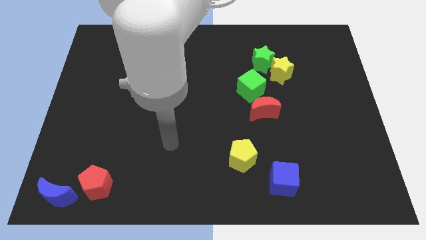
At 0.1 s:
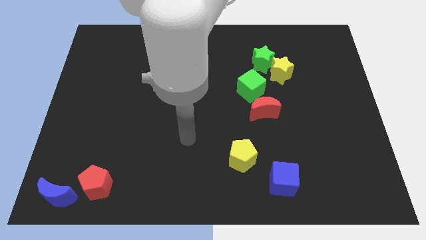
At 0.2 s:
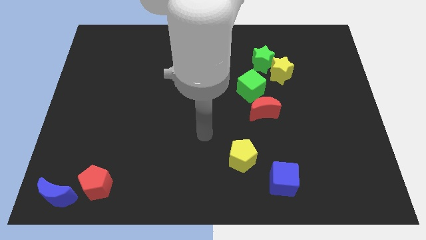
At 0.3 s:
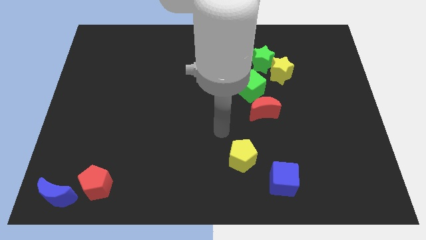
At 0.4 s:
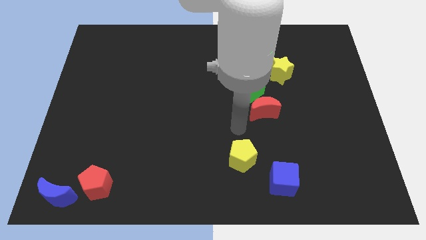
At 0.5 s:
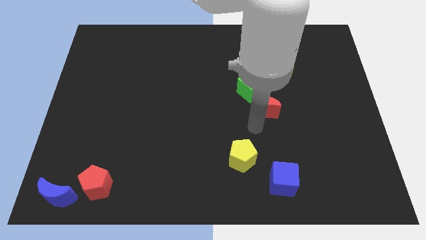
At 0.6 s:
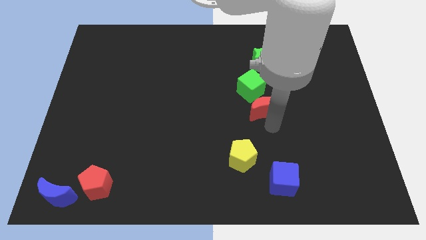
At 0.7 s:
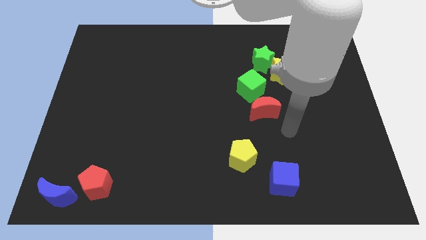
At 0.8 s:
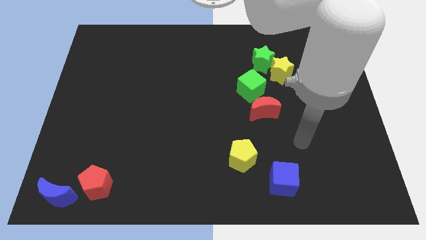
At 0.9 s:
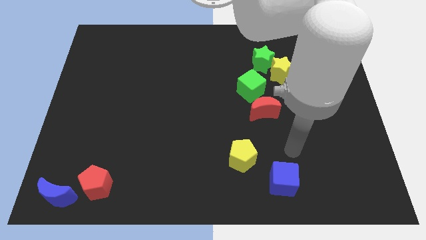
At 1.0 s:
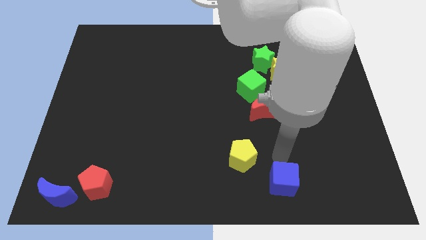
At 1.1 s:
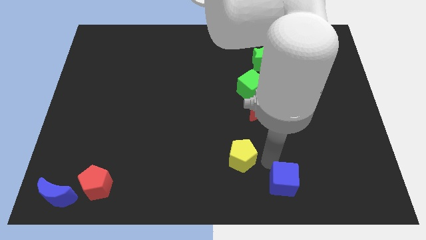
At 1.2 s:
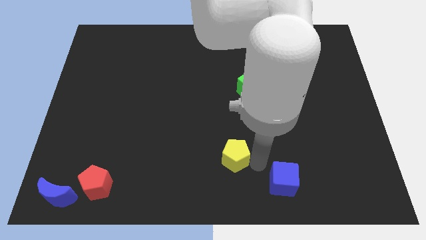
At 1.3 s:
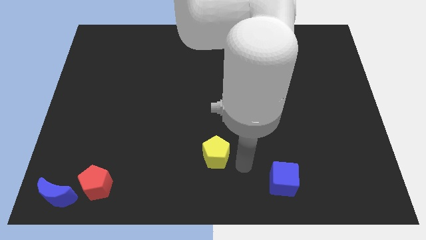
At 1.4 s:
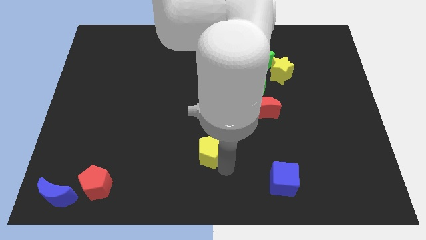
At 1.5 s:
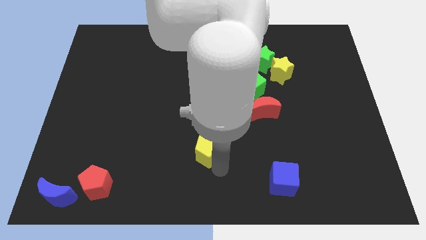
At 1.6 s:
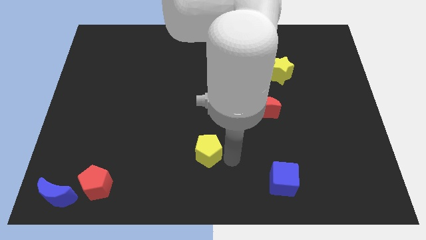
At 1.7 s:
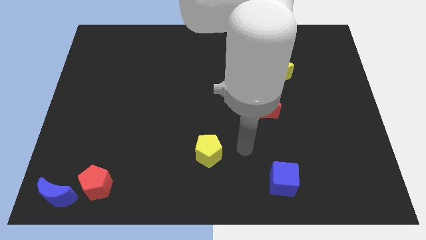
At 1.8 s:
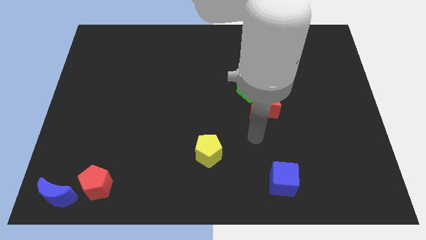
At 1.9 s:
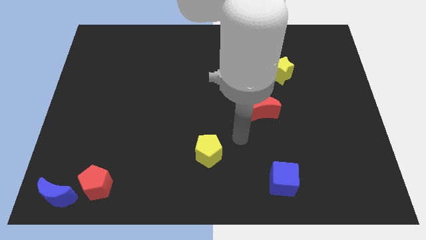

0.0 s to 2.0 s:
move the yellow pentagon to the left of blue cube

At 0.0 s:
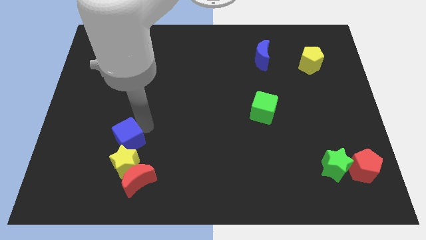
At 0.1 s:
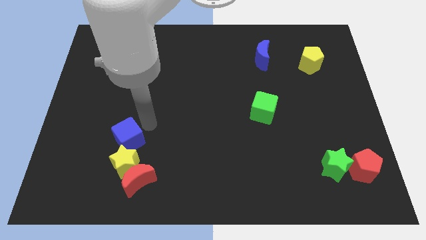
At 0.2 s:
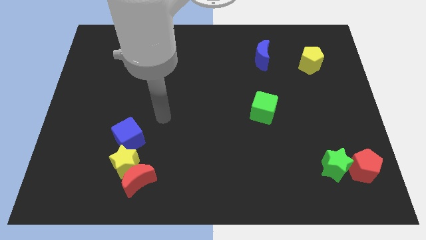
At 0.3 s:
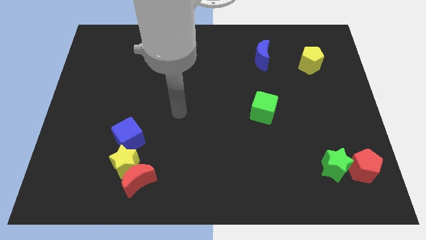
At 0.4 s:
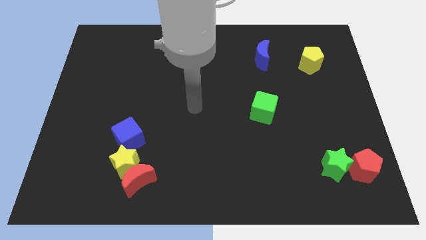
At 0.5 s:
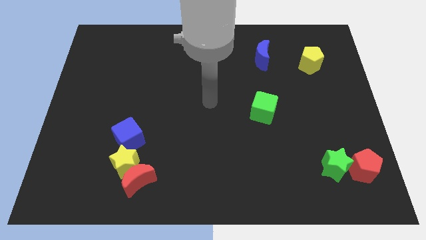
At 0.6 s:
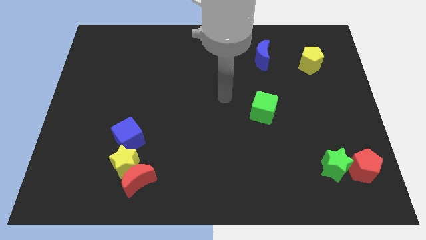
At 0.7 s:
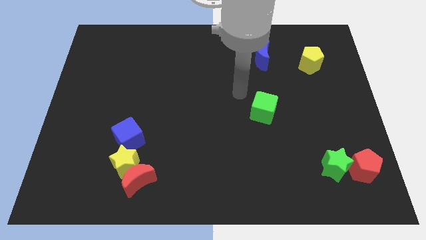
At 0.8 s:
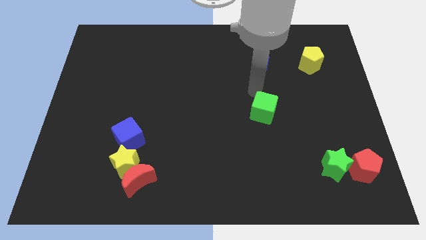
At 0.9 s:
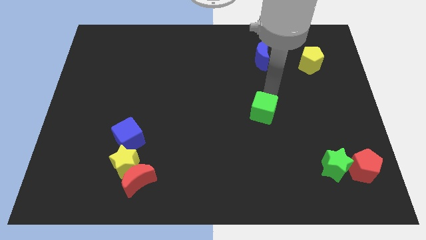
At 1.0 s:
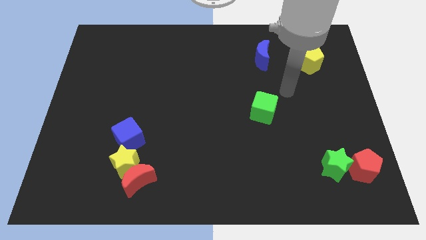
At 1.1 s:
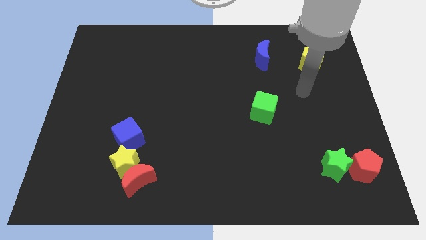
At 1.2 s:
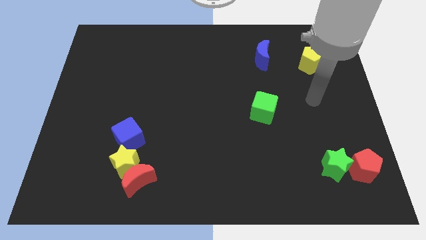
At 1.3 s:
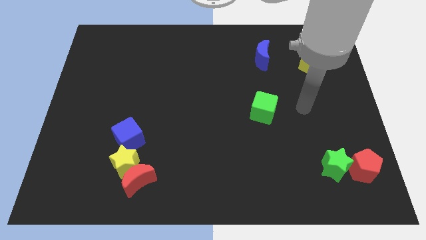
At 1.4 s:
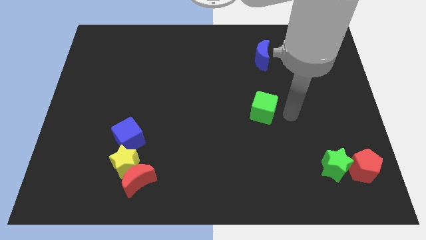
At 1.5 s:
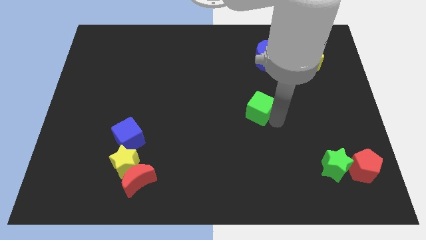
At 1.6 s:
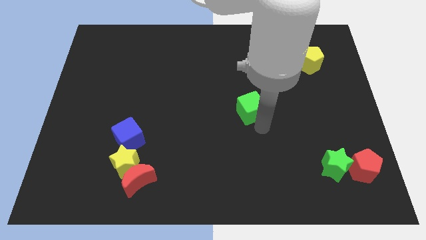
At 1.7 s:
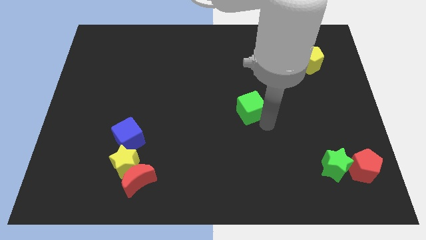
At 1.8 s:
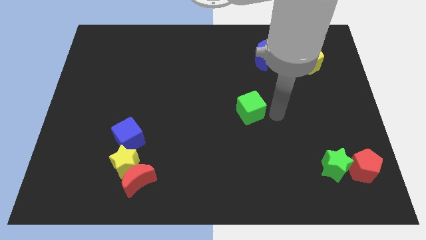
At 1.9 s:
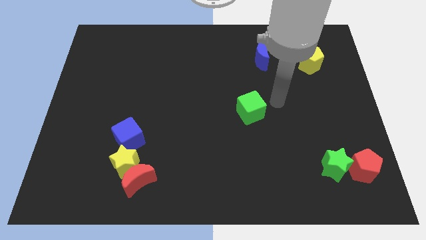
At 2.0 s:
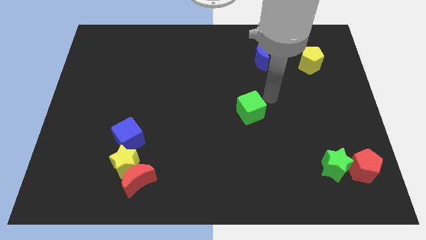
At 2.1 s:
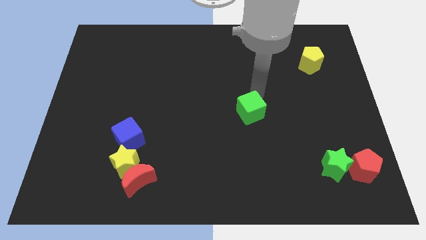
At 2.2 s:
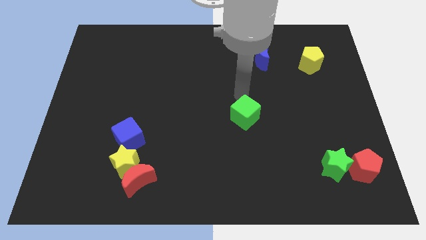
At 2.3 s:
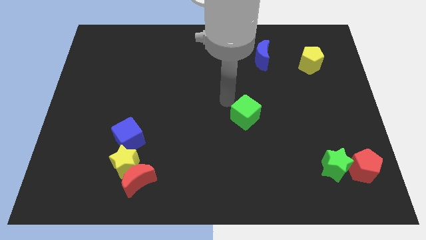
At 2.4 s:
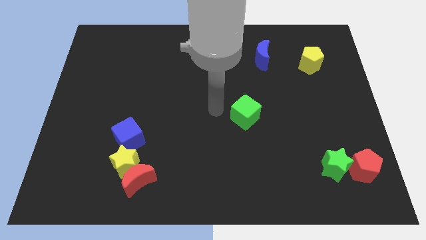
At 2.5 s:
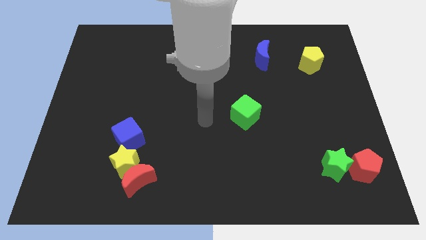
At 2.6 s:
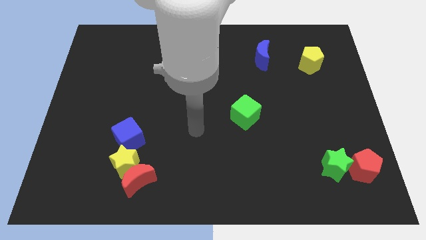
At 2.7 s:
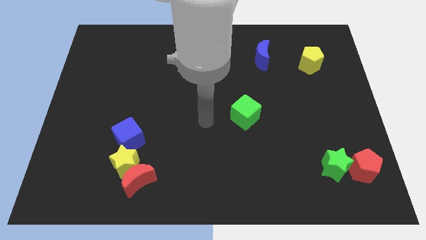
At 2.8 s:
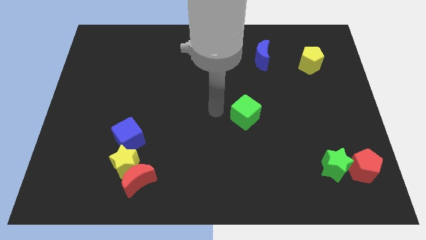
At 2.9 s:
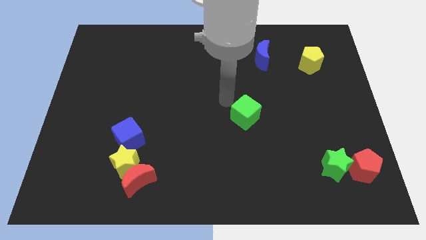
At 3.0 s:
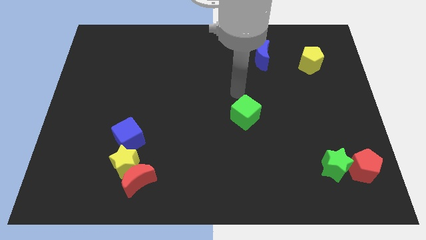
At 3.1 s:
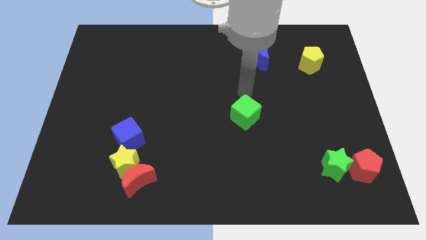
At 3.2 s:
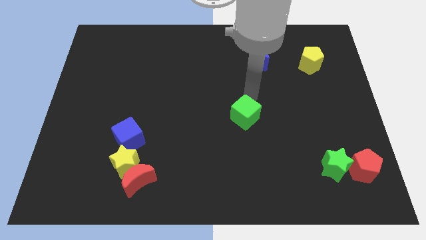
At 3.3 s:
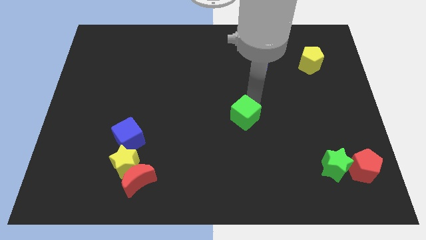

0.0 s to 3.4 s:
move green cube slightly to the bottom of the board

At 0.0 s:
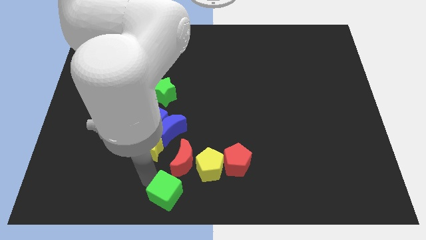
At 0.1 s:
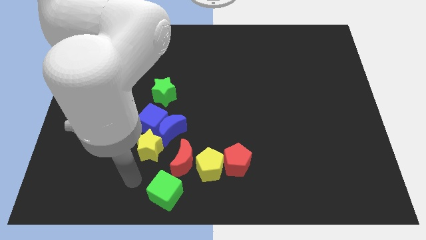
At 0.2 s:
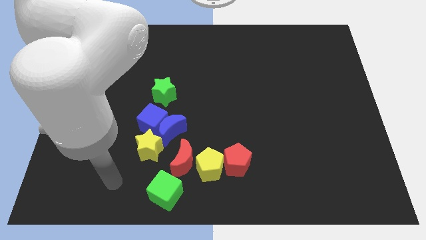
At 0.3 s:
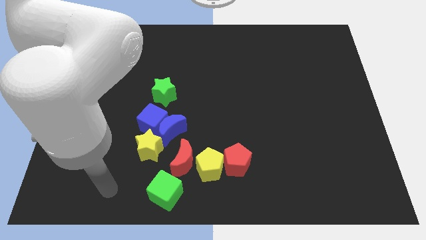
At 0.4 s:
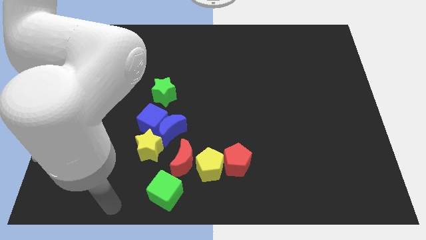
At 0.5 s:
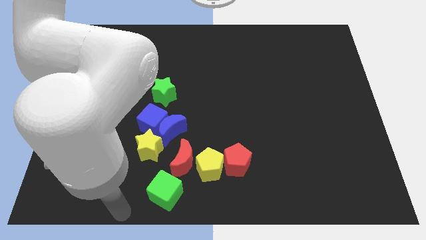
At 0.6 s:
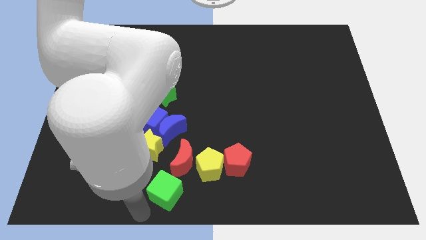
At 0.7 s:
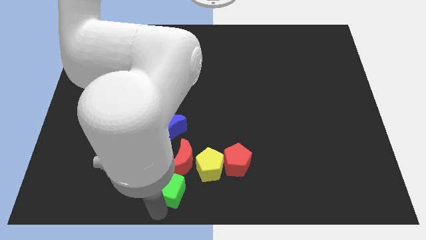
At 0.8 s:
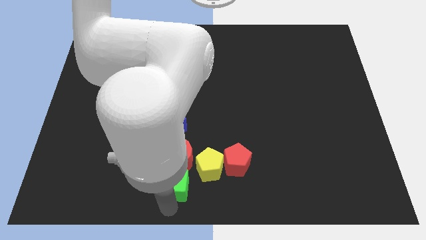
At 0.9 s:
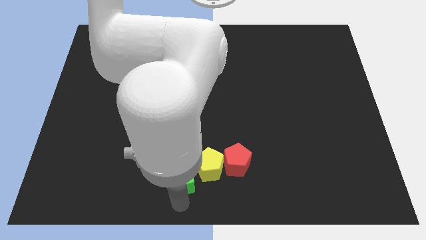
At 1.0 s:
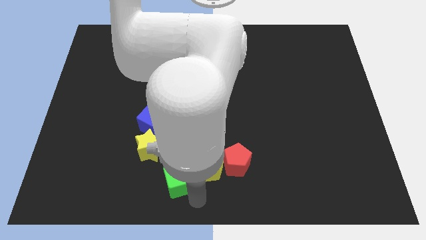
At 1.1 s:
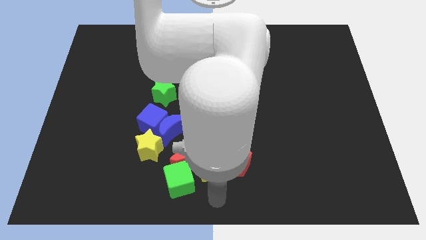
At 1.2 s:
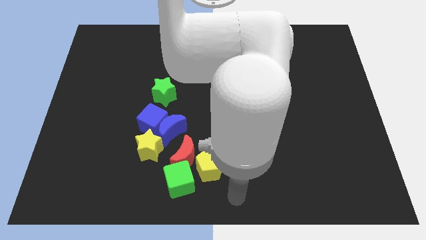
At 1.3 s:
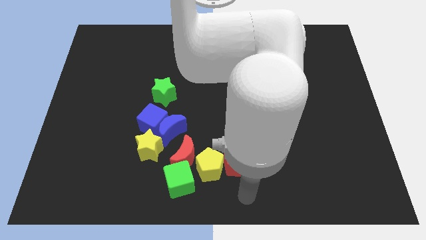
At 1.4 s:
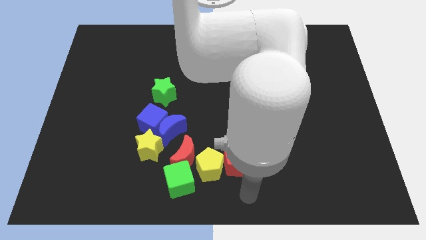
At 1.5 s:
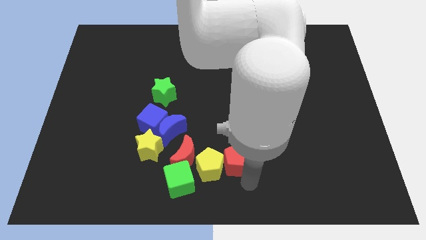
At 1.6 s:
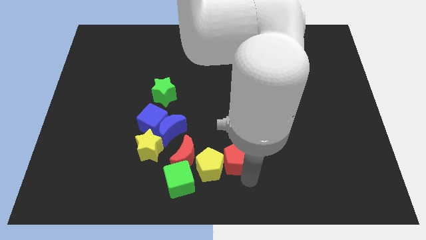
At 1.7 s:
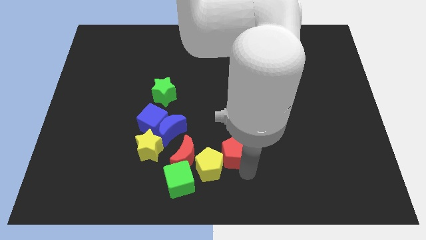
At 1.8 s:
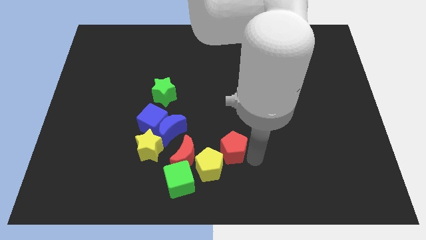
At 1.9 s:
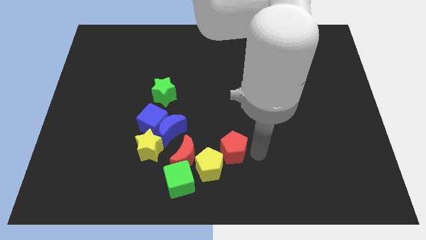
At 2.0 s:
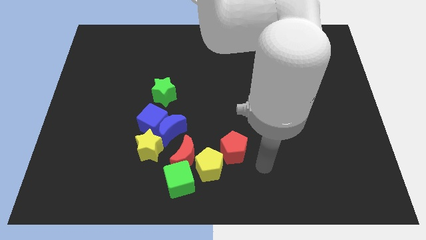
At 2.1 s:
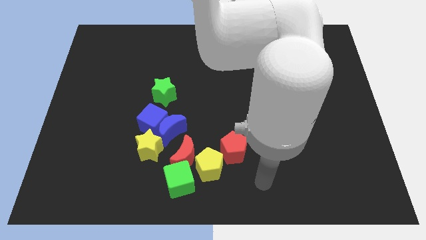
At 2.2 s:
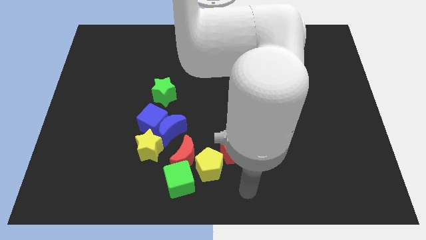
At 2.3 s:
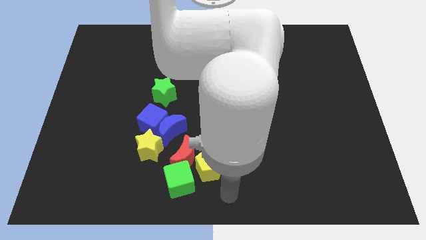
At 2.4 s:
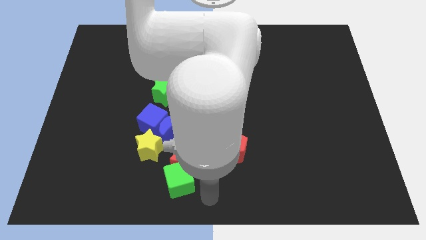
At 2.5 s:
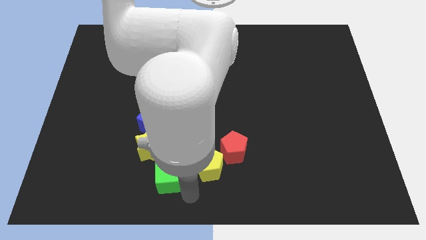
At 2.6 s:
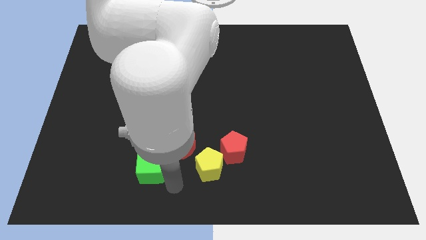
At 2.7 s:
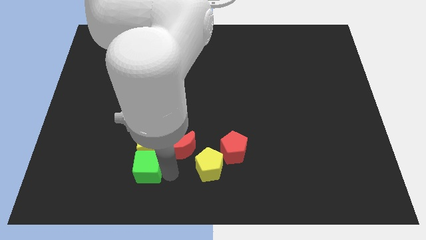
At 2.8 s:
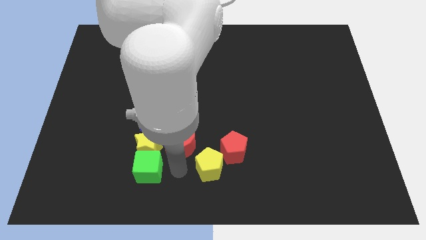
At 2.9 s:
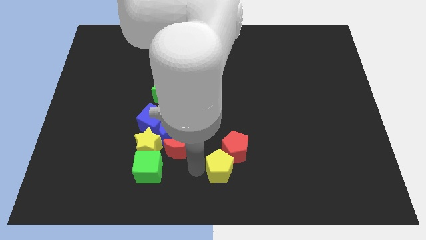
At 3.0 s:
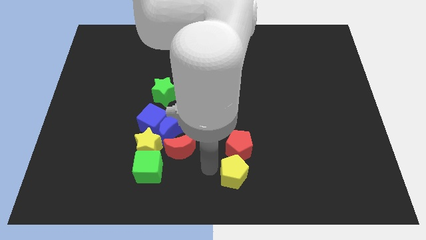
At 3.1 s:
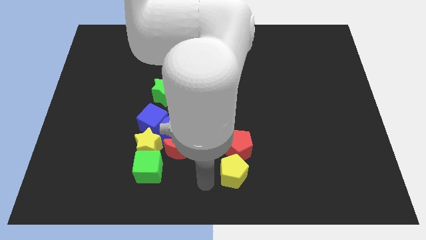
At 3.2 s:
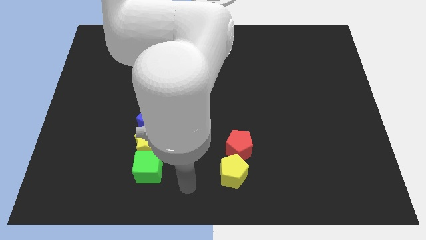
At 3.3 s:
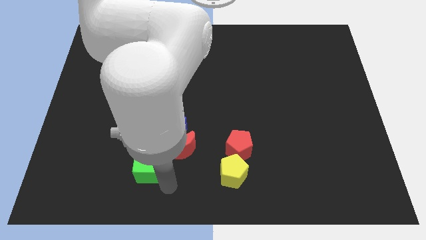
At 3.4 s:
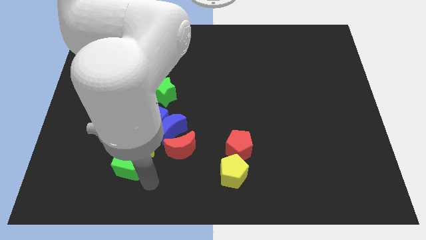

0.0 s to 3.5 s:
place the red pentagon and yellow pentagon in a vertical line at the bottom center of the board
